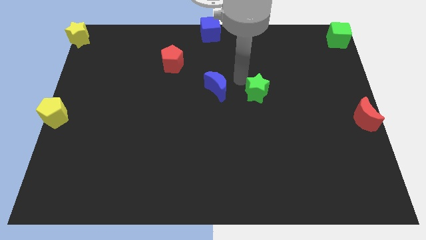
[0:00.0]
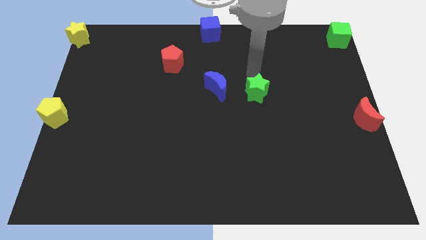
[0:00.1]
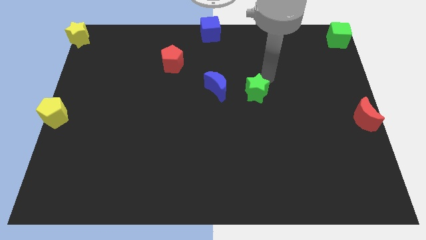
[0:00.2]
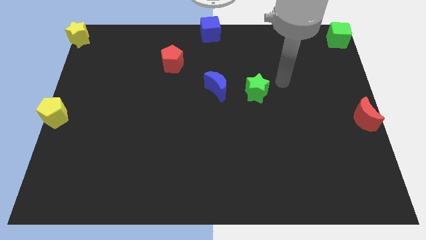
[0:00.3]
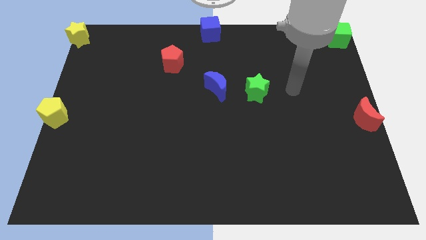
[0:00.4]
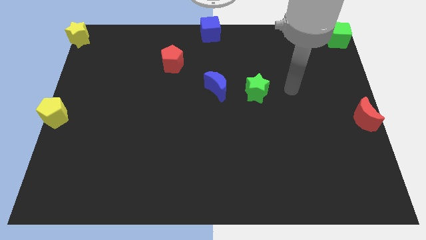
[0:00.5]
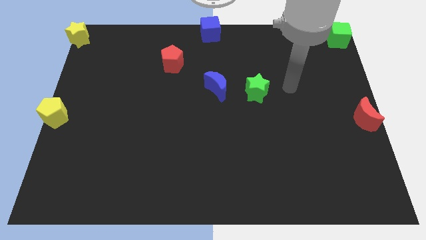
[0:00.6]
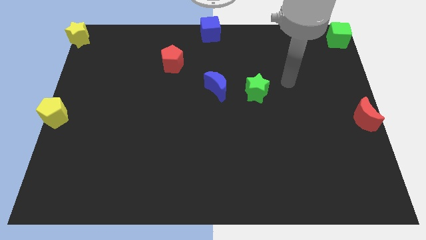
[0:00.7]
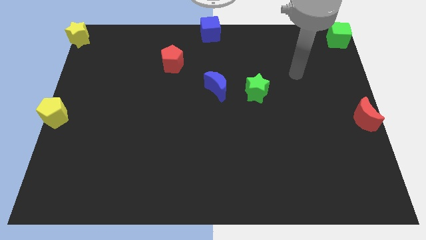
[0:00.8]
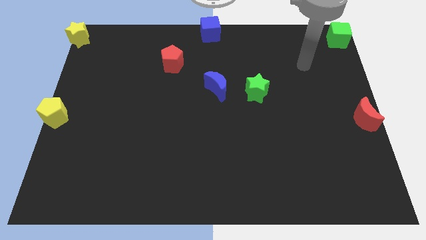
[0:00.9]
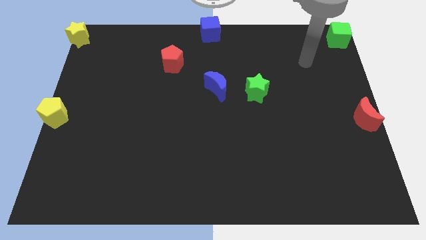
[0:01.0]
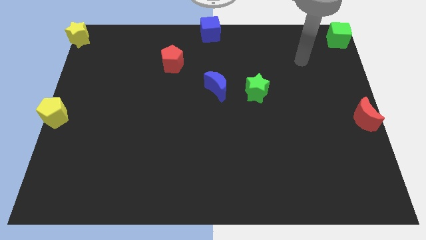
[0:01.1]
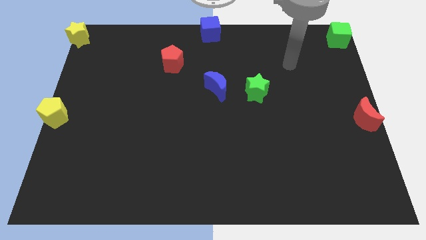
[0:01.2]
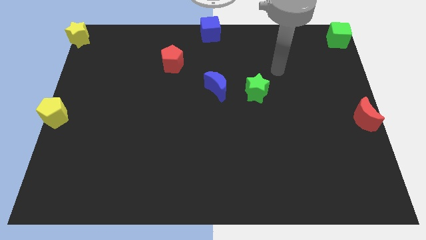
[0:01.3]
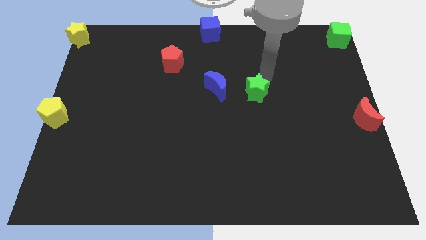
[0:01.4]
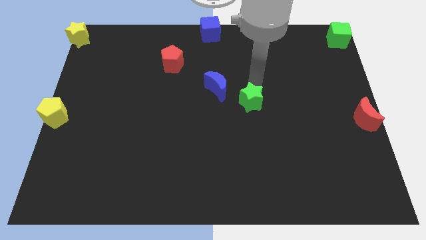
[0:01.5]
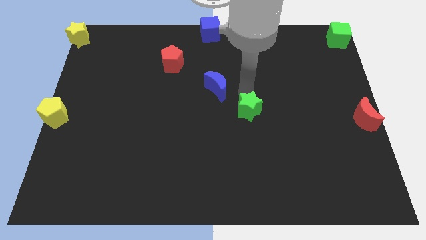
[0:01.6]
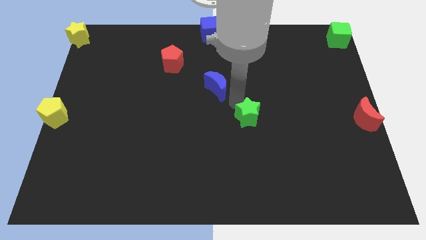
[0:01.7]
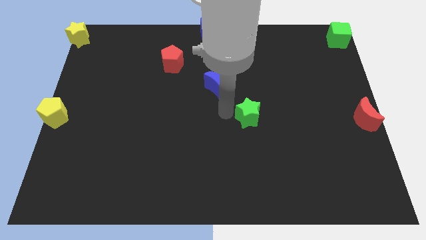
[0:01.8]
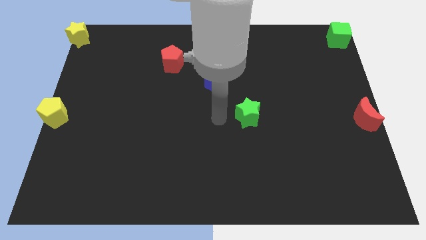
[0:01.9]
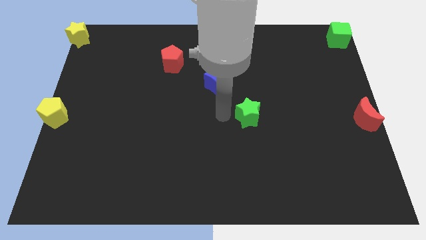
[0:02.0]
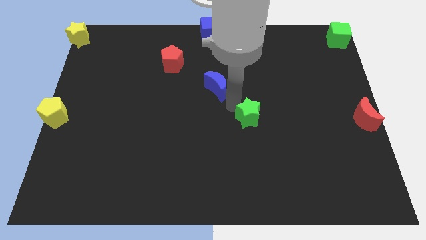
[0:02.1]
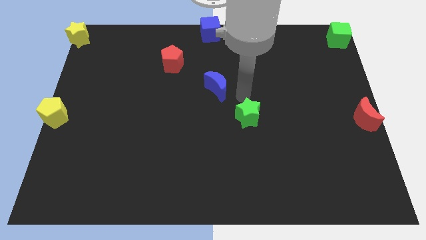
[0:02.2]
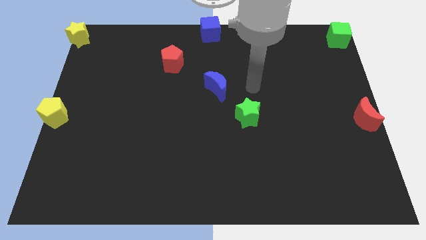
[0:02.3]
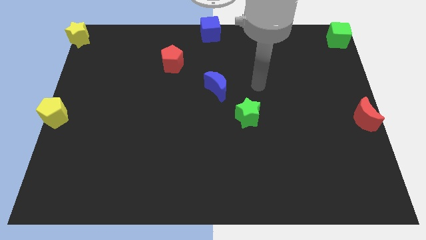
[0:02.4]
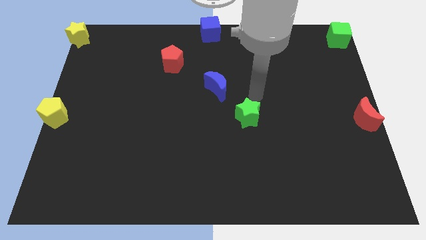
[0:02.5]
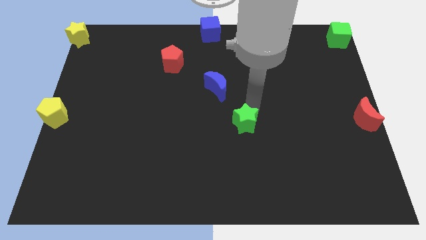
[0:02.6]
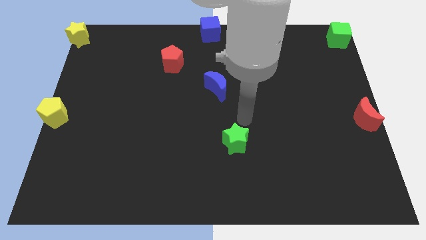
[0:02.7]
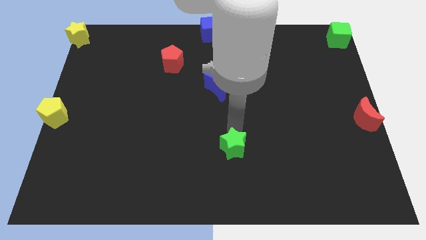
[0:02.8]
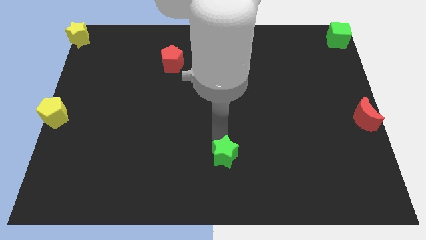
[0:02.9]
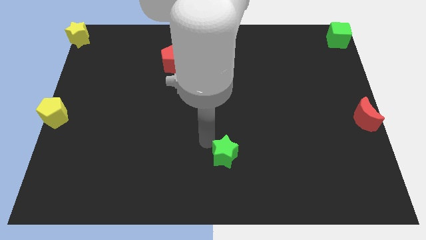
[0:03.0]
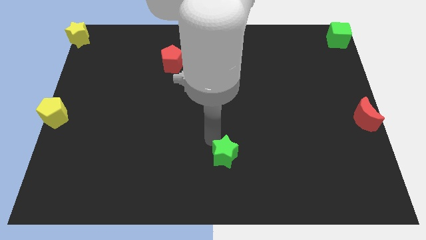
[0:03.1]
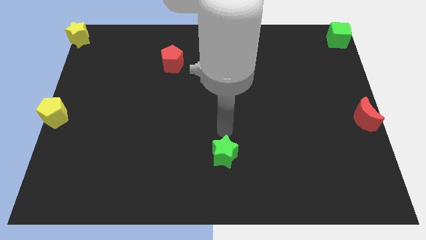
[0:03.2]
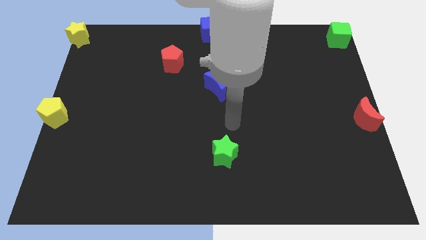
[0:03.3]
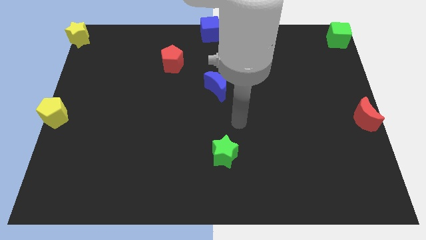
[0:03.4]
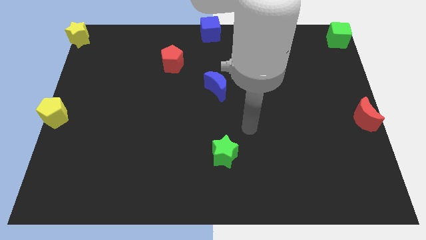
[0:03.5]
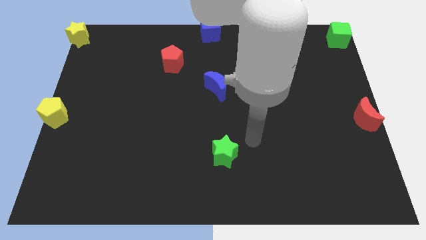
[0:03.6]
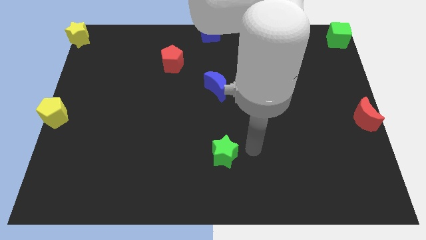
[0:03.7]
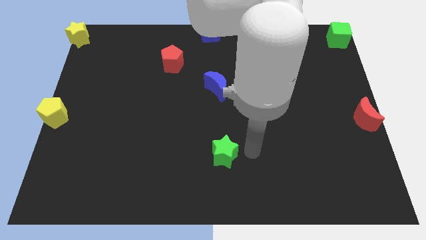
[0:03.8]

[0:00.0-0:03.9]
move the green star below the blue moon

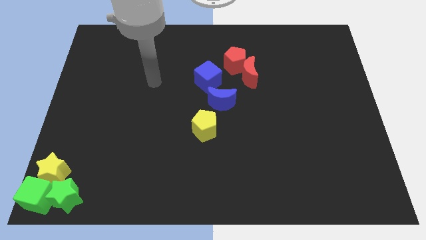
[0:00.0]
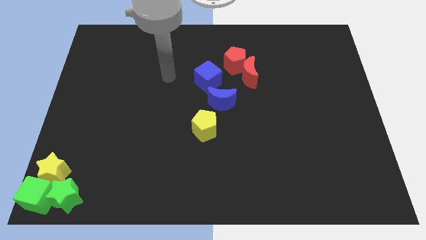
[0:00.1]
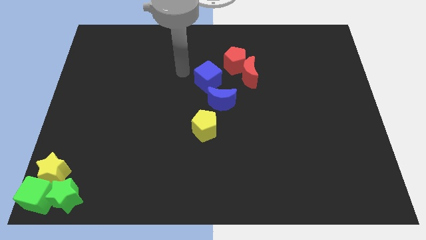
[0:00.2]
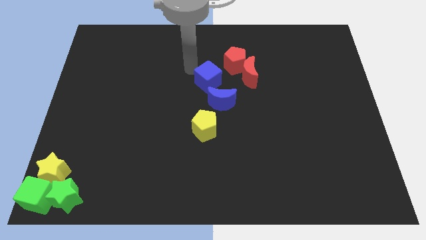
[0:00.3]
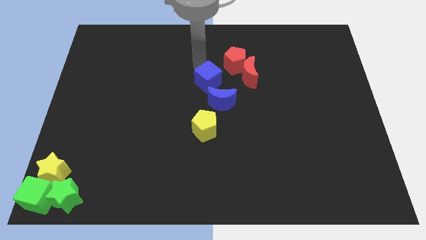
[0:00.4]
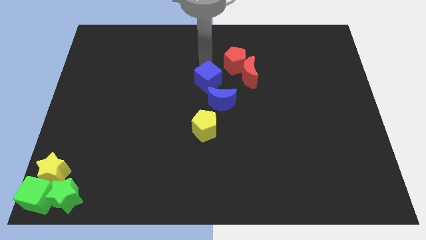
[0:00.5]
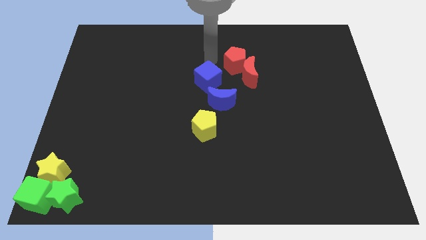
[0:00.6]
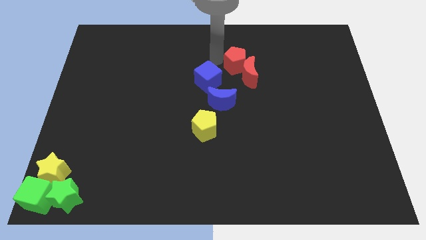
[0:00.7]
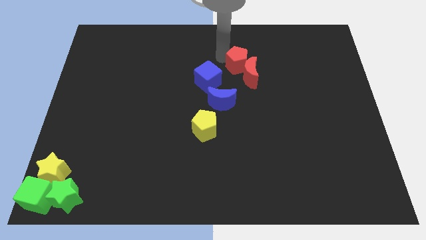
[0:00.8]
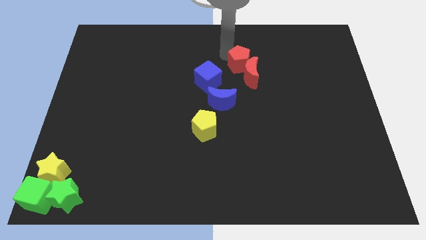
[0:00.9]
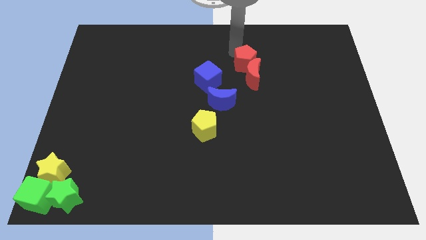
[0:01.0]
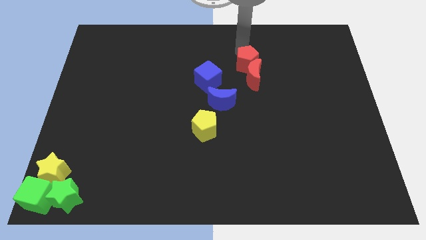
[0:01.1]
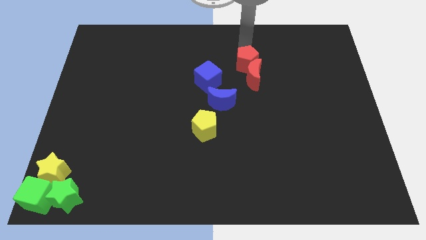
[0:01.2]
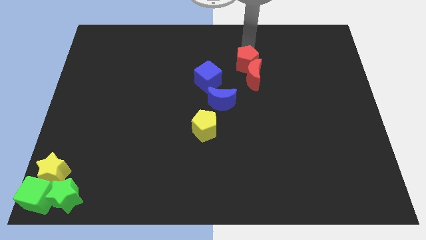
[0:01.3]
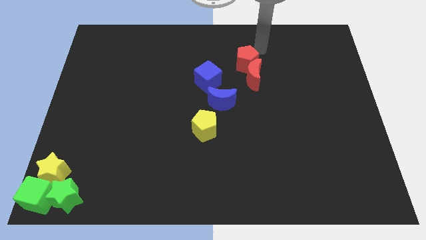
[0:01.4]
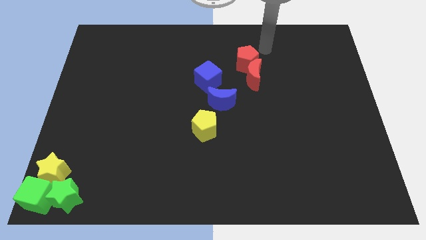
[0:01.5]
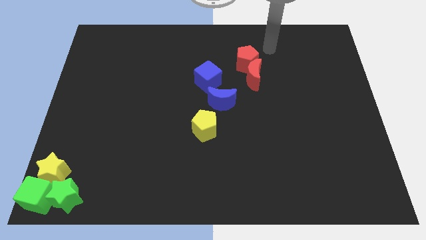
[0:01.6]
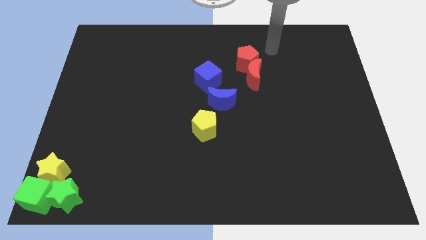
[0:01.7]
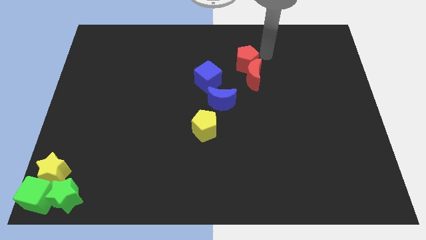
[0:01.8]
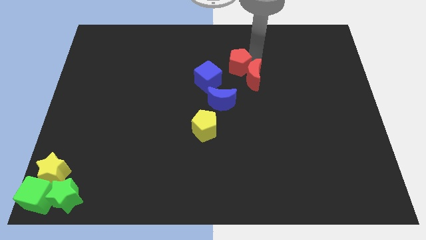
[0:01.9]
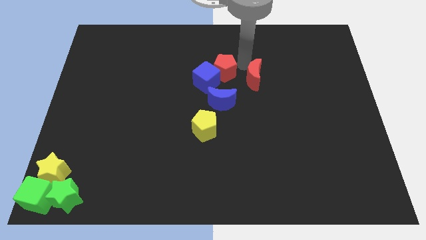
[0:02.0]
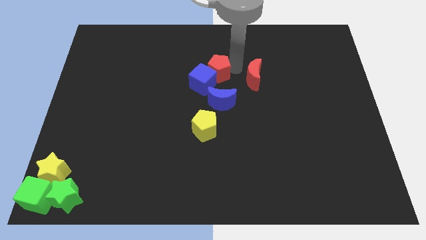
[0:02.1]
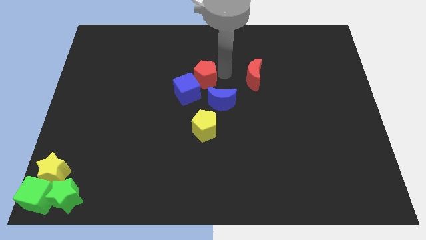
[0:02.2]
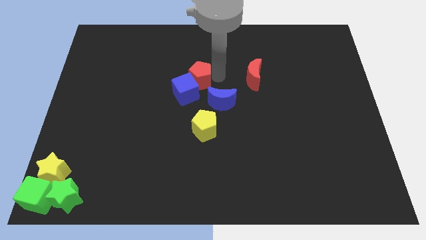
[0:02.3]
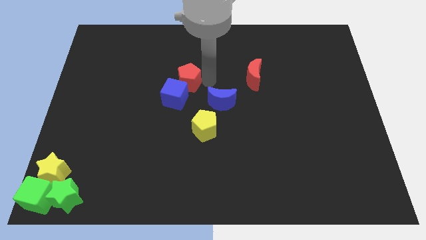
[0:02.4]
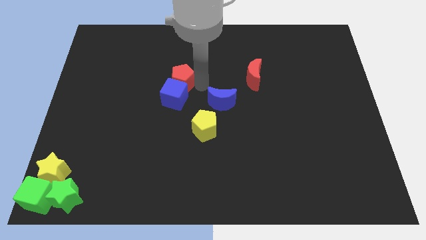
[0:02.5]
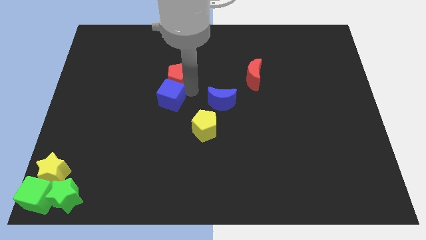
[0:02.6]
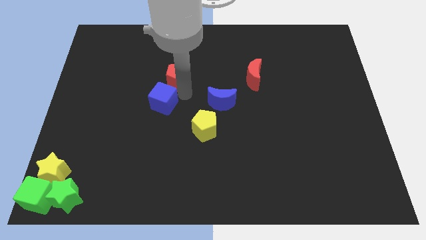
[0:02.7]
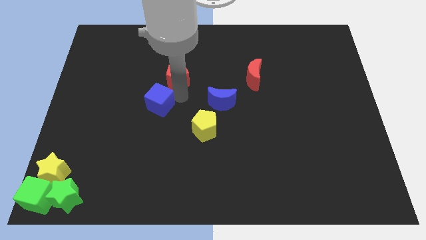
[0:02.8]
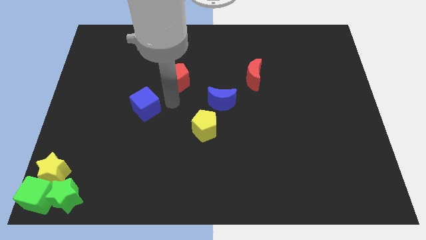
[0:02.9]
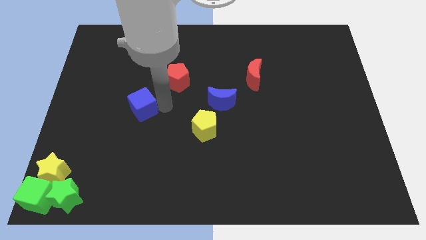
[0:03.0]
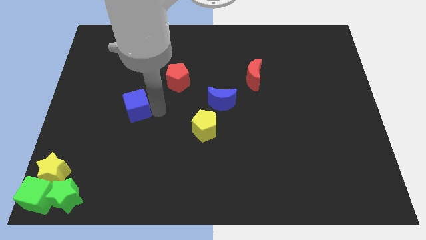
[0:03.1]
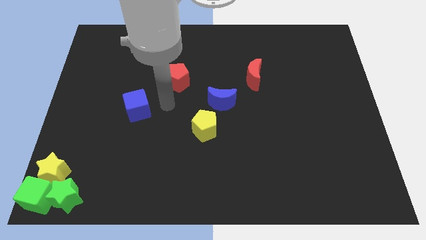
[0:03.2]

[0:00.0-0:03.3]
place the blue cube left to the blue moon

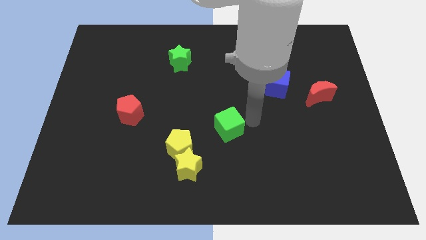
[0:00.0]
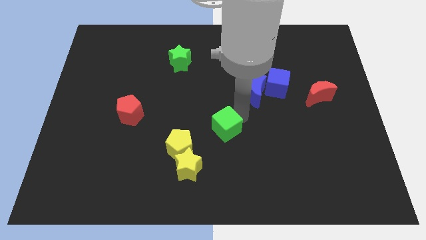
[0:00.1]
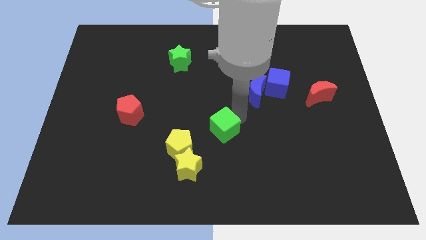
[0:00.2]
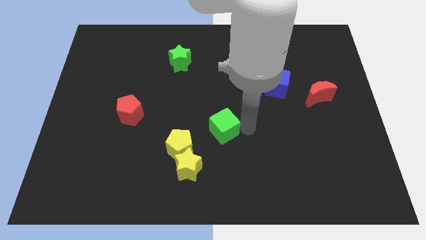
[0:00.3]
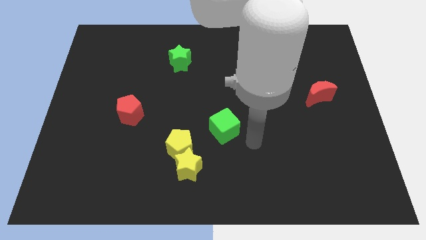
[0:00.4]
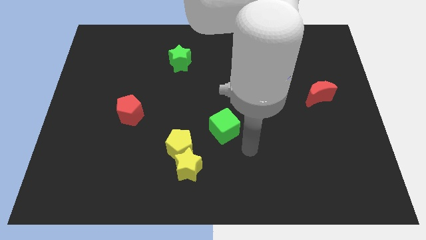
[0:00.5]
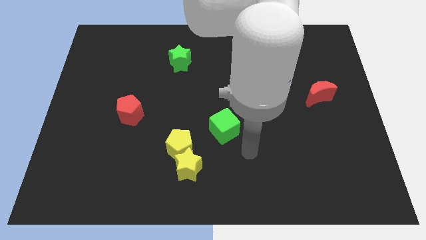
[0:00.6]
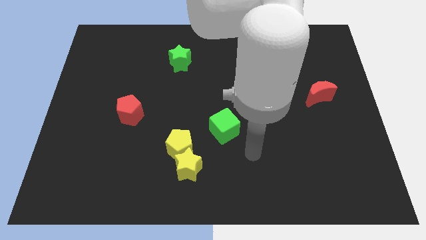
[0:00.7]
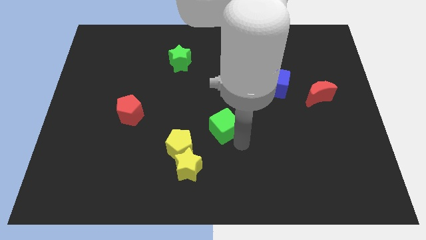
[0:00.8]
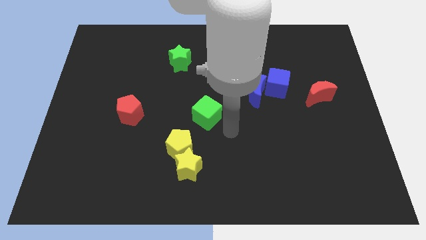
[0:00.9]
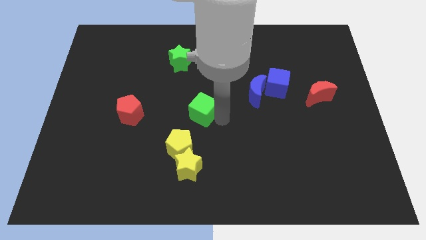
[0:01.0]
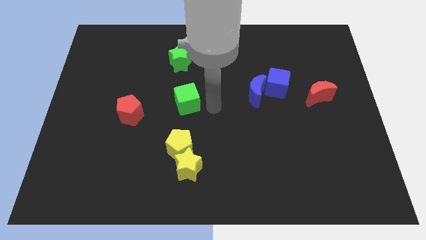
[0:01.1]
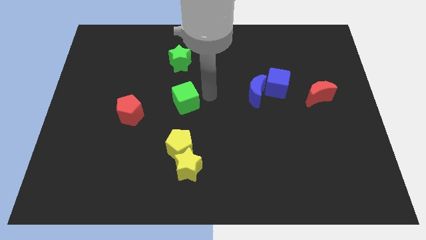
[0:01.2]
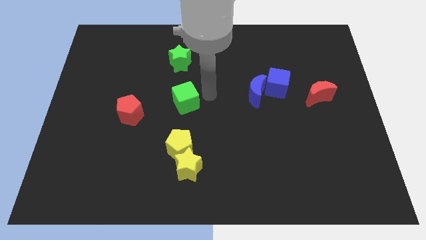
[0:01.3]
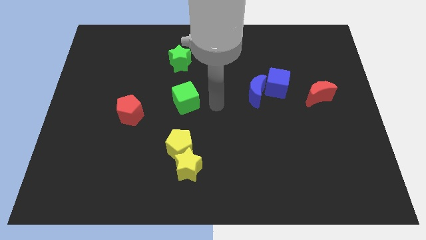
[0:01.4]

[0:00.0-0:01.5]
move green cube to the bottom of green star

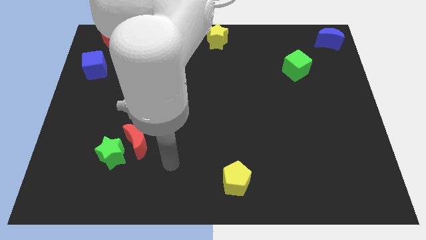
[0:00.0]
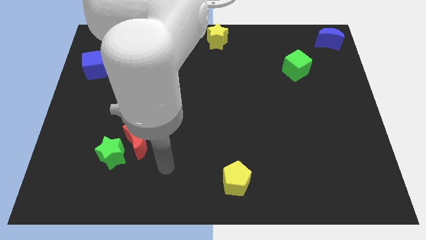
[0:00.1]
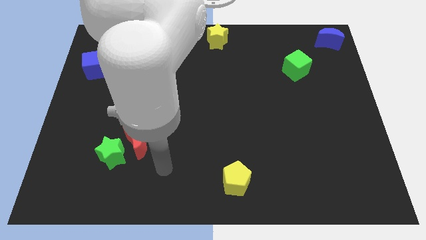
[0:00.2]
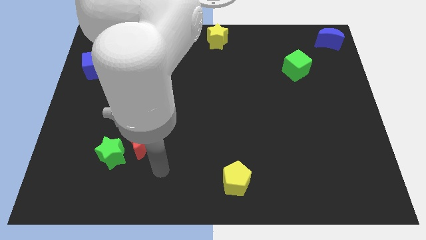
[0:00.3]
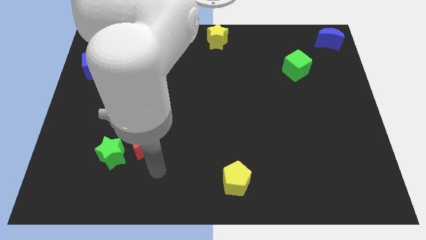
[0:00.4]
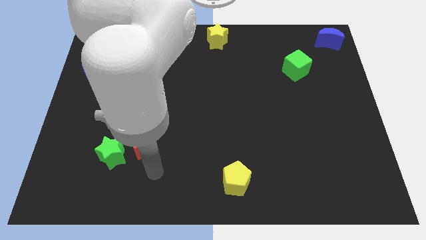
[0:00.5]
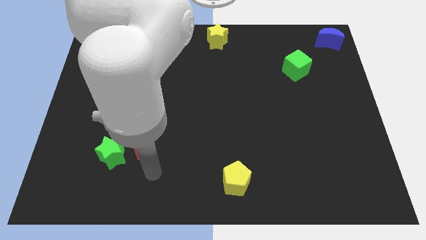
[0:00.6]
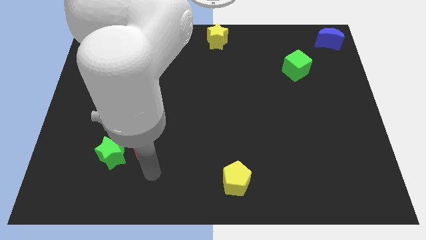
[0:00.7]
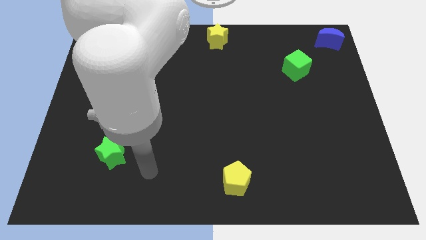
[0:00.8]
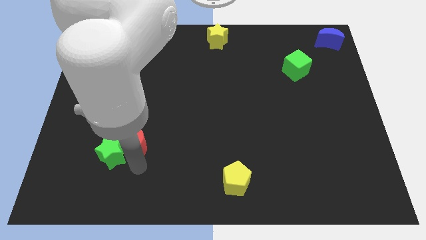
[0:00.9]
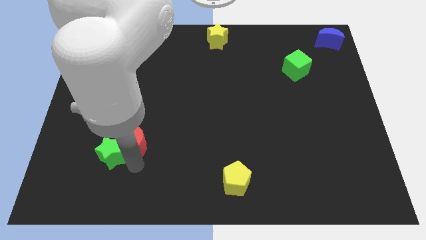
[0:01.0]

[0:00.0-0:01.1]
move your arm to the bottom of the red crescent
